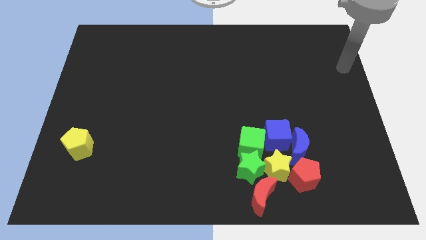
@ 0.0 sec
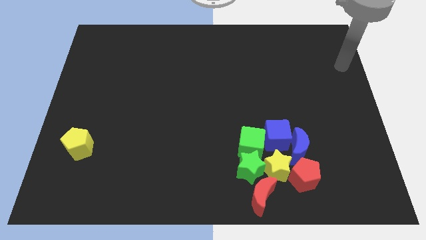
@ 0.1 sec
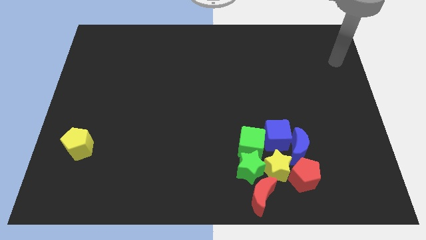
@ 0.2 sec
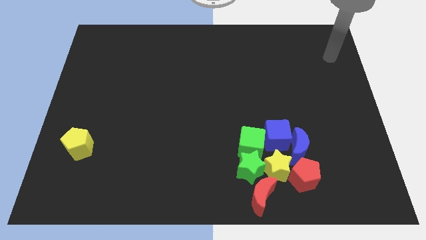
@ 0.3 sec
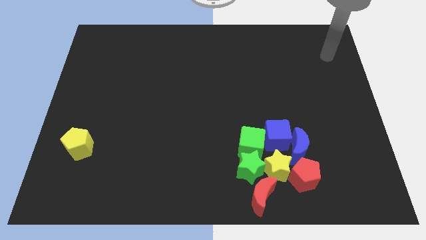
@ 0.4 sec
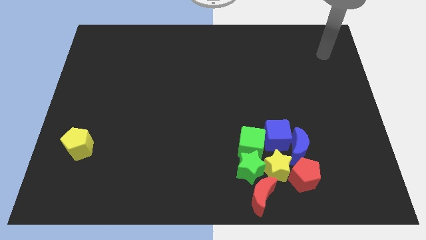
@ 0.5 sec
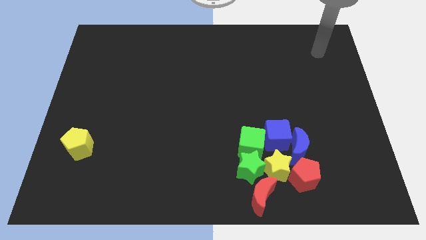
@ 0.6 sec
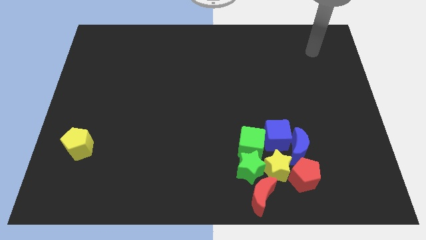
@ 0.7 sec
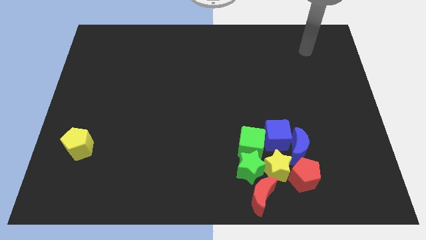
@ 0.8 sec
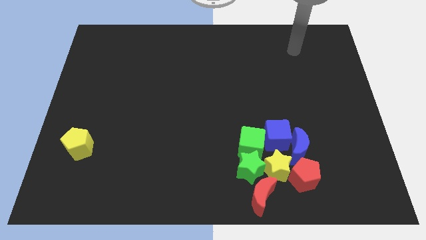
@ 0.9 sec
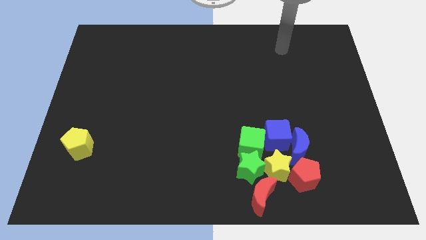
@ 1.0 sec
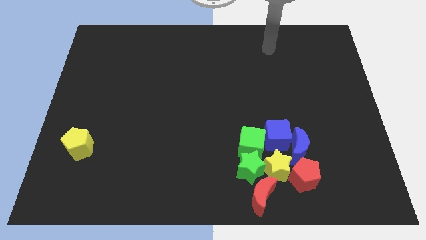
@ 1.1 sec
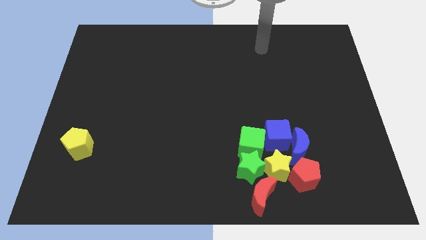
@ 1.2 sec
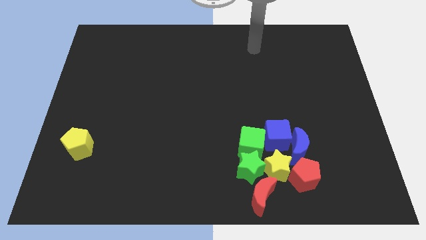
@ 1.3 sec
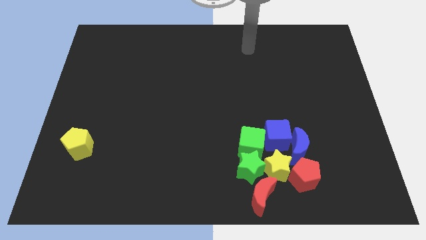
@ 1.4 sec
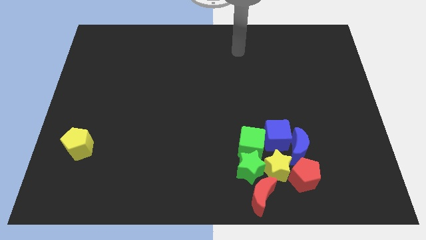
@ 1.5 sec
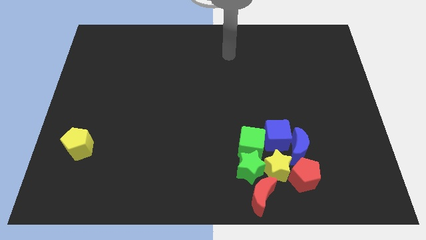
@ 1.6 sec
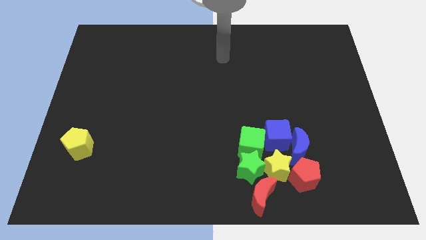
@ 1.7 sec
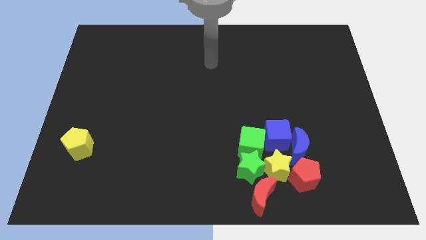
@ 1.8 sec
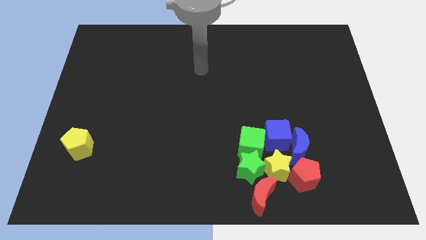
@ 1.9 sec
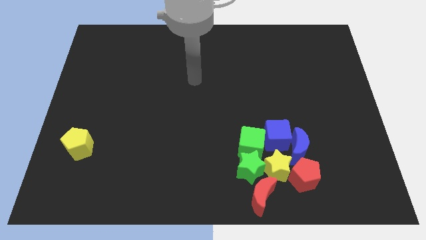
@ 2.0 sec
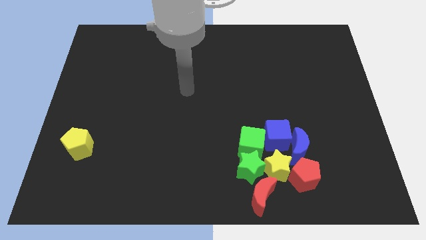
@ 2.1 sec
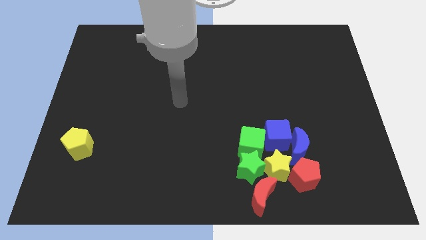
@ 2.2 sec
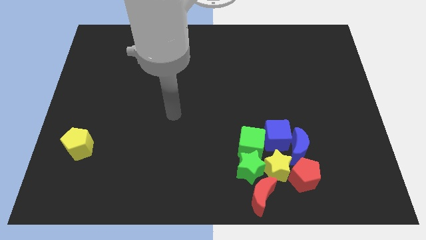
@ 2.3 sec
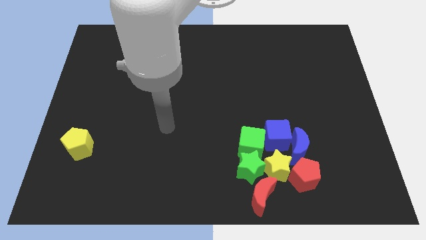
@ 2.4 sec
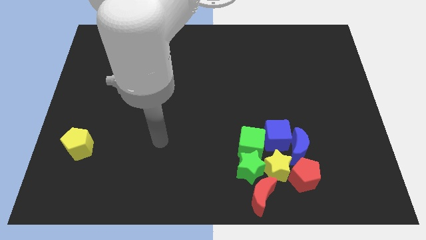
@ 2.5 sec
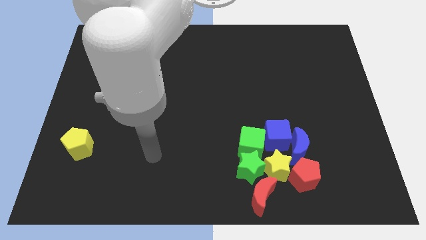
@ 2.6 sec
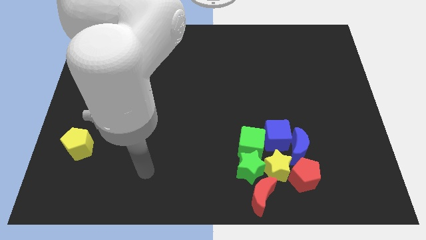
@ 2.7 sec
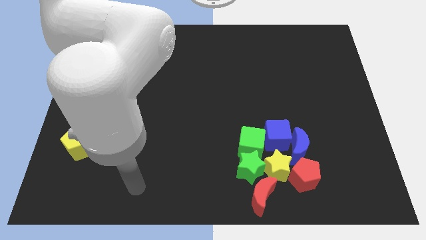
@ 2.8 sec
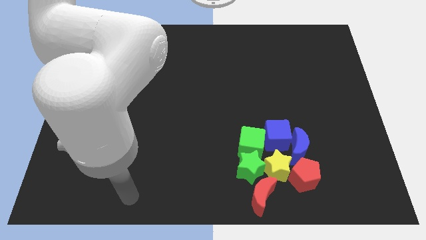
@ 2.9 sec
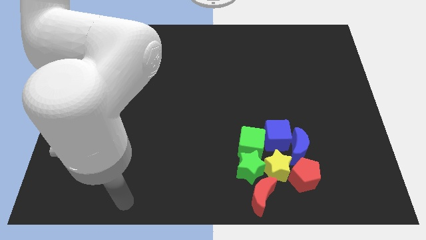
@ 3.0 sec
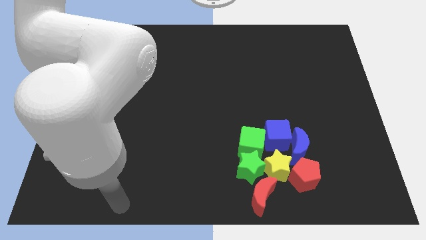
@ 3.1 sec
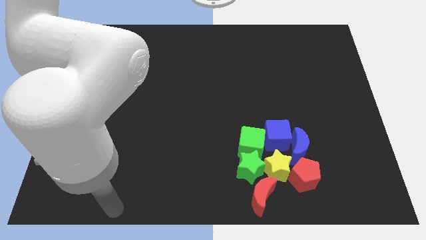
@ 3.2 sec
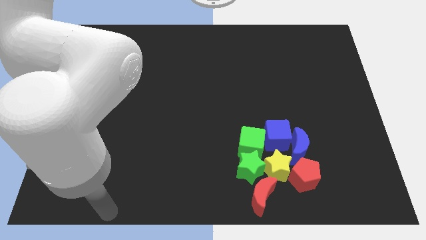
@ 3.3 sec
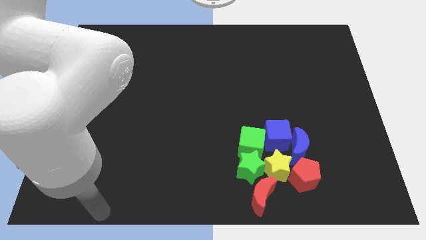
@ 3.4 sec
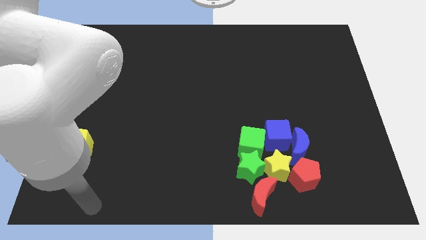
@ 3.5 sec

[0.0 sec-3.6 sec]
place your arm at the bottom of the board

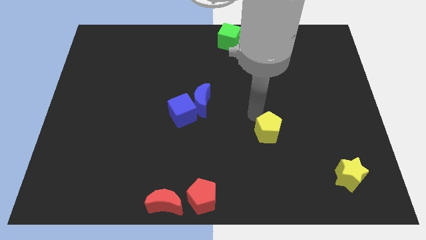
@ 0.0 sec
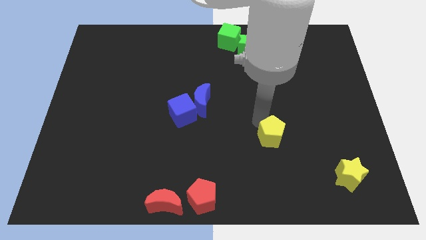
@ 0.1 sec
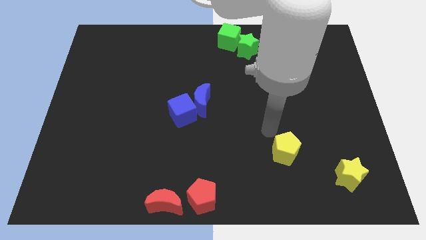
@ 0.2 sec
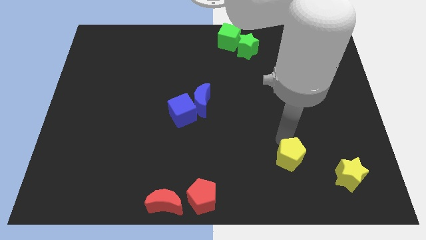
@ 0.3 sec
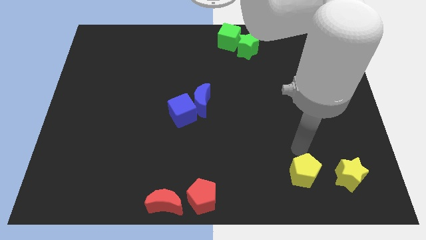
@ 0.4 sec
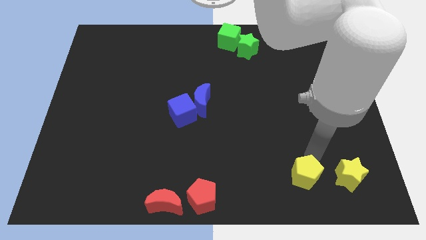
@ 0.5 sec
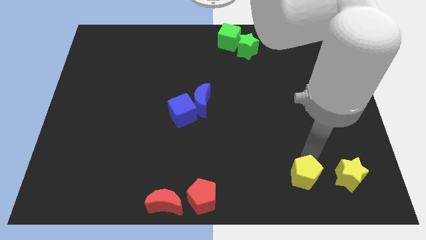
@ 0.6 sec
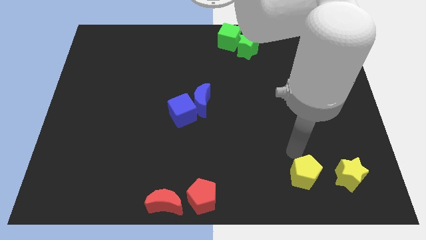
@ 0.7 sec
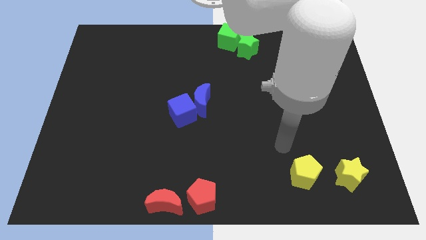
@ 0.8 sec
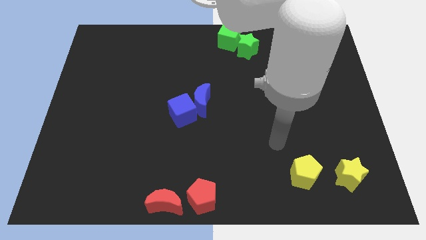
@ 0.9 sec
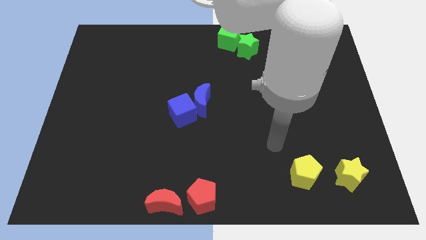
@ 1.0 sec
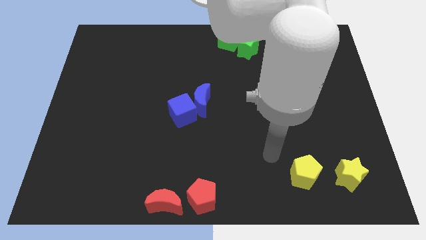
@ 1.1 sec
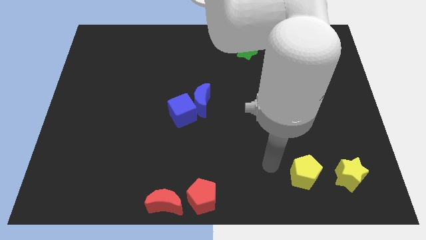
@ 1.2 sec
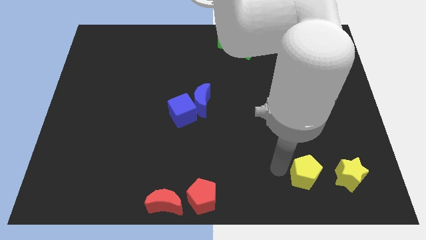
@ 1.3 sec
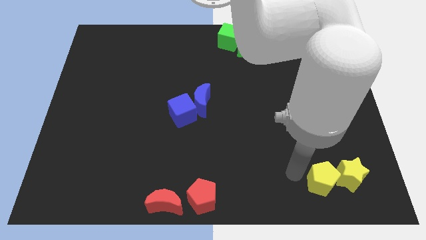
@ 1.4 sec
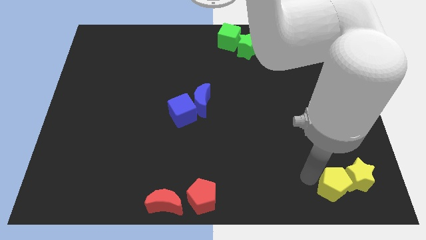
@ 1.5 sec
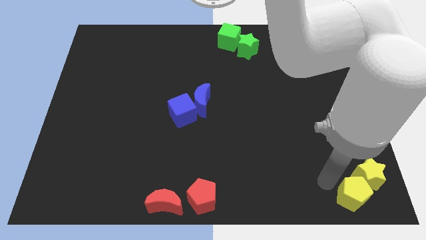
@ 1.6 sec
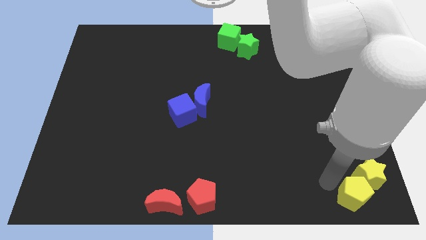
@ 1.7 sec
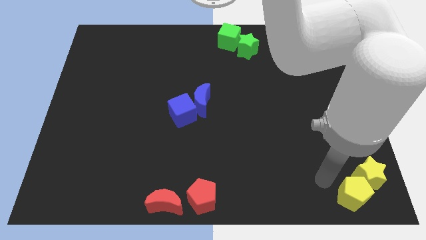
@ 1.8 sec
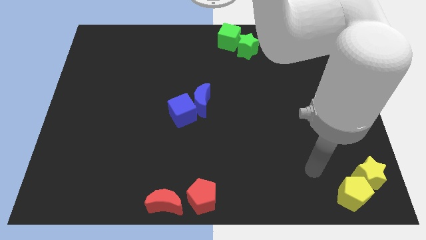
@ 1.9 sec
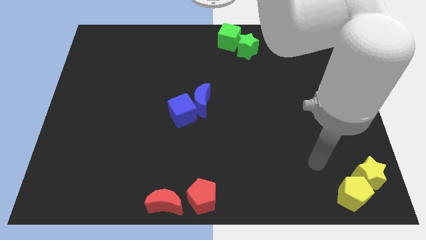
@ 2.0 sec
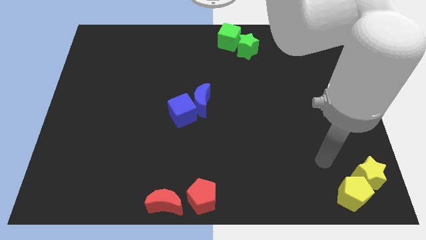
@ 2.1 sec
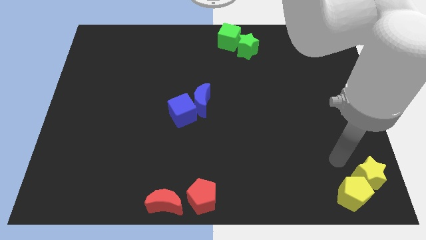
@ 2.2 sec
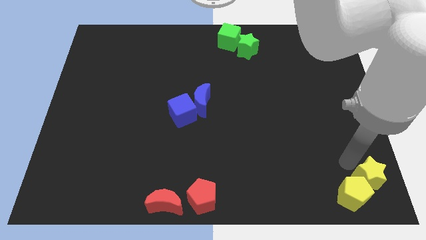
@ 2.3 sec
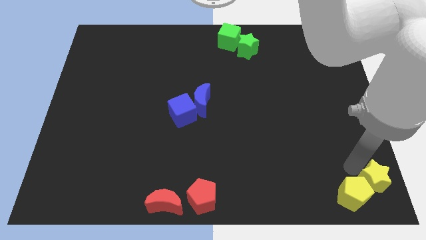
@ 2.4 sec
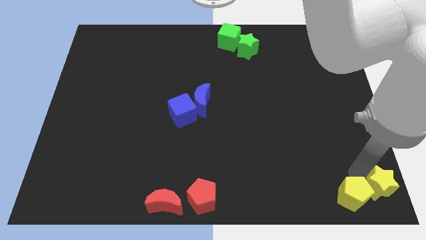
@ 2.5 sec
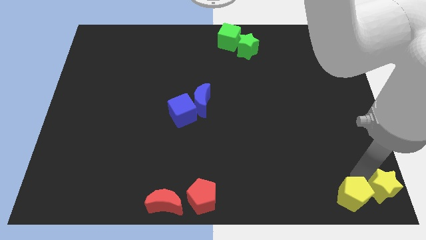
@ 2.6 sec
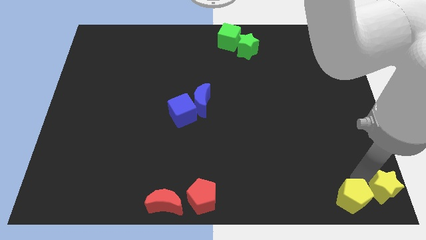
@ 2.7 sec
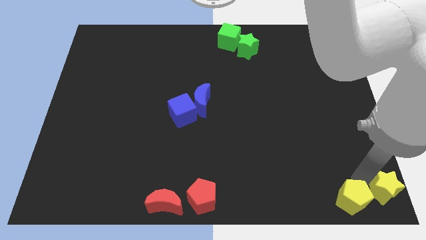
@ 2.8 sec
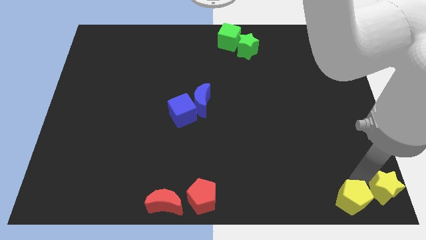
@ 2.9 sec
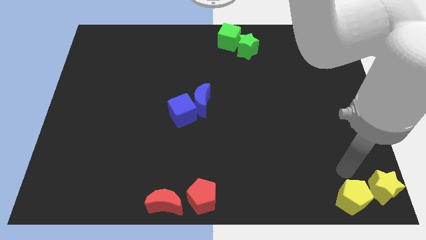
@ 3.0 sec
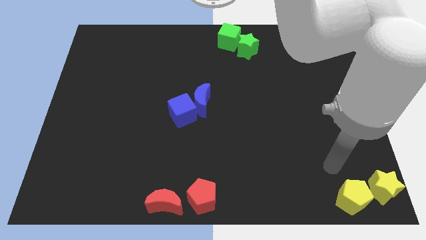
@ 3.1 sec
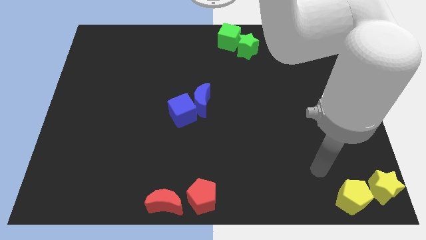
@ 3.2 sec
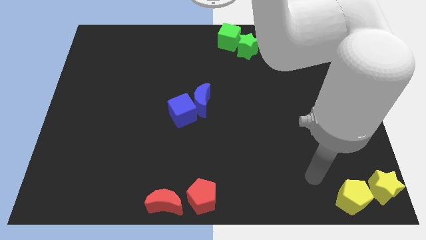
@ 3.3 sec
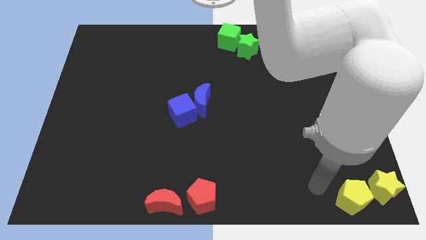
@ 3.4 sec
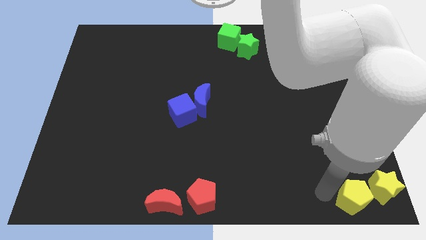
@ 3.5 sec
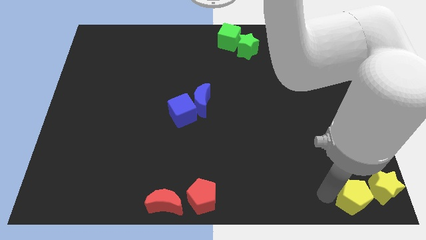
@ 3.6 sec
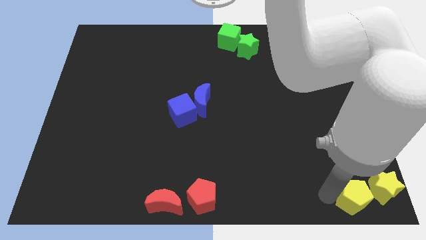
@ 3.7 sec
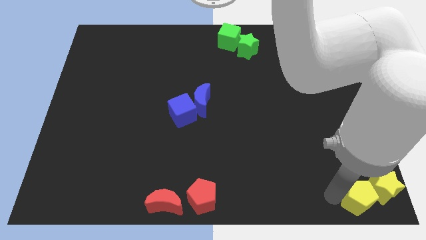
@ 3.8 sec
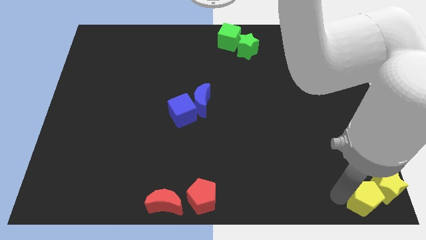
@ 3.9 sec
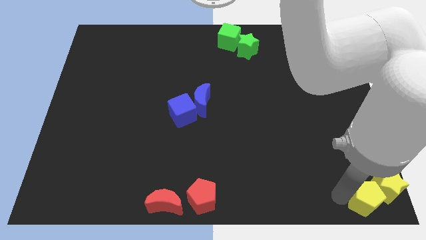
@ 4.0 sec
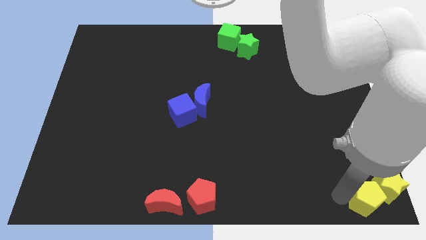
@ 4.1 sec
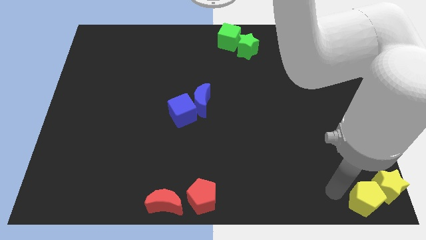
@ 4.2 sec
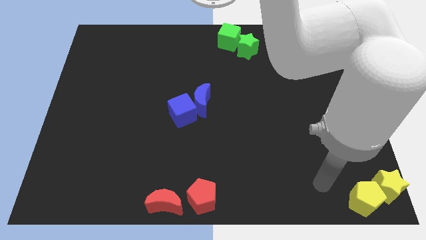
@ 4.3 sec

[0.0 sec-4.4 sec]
move the yellow pentagon along with yellow star to the right bottom corner of the board

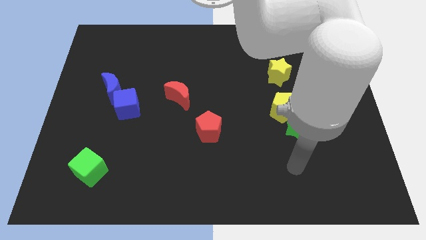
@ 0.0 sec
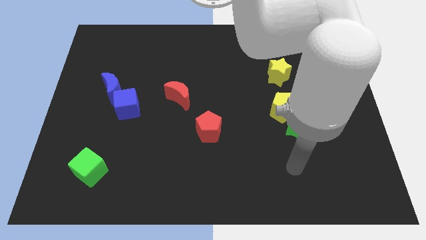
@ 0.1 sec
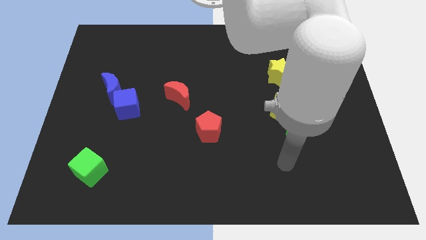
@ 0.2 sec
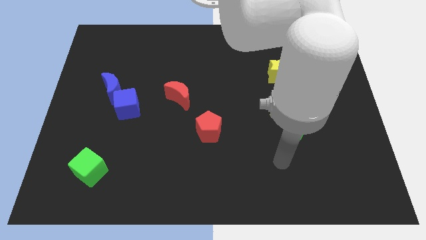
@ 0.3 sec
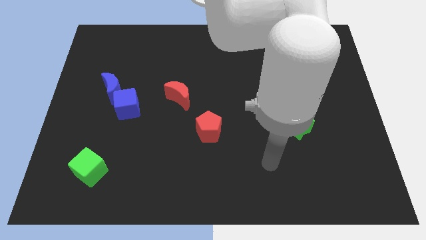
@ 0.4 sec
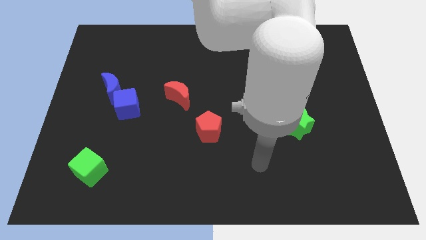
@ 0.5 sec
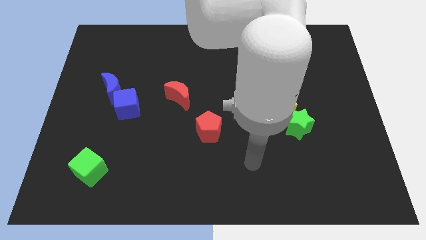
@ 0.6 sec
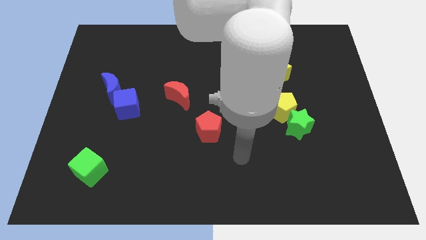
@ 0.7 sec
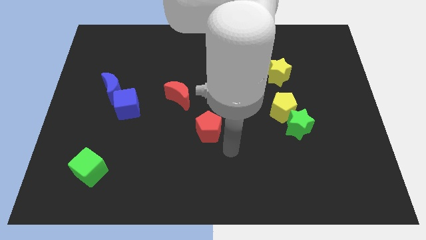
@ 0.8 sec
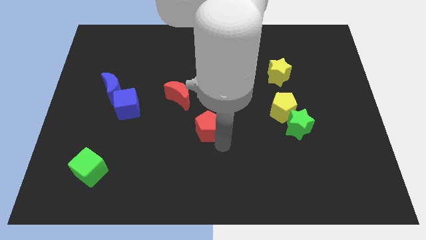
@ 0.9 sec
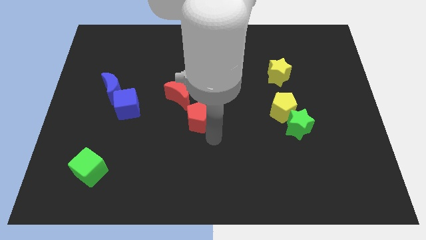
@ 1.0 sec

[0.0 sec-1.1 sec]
move your arm to the center
